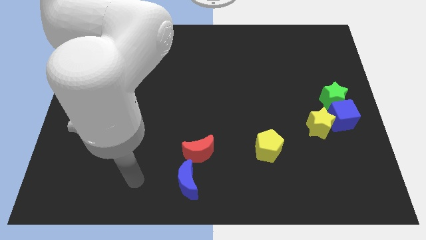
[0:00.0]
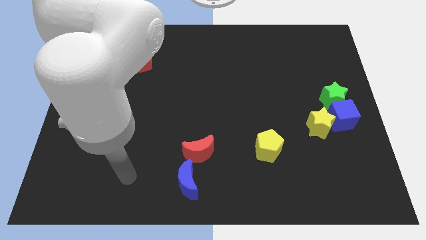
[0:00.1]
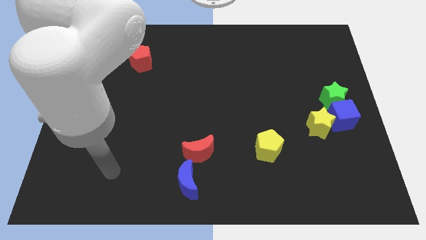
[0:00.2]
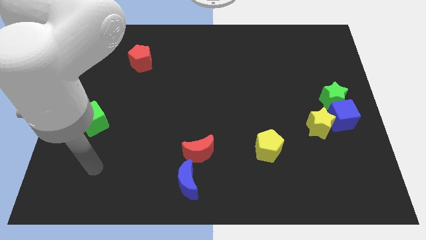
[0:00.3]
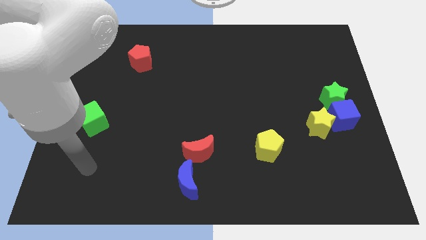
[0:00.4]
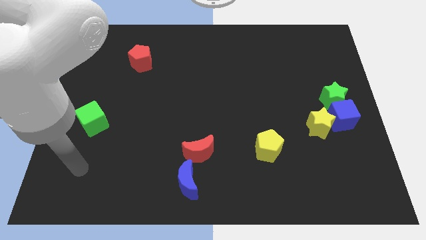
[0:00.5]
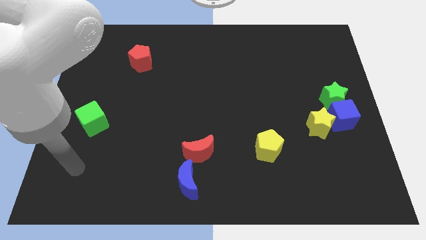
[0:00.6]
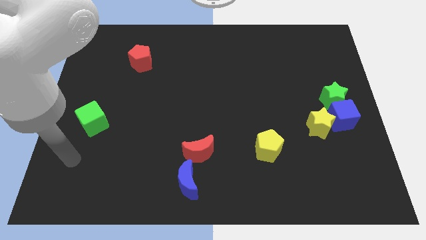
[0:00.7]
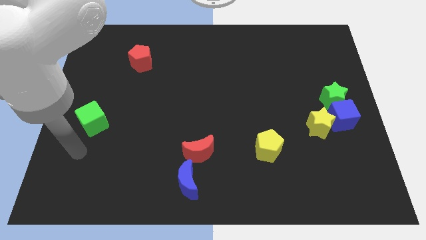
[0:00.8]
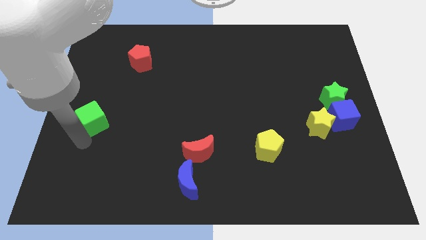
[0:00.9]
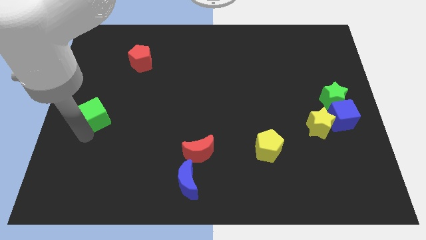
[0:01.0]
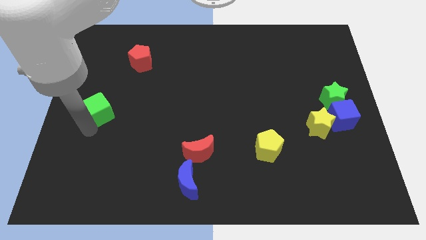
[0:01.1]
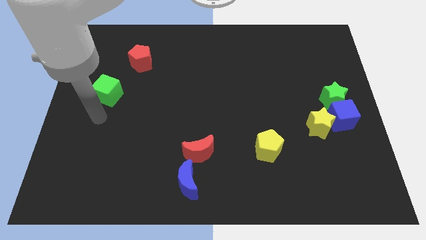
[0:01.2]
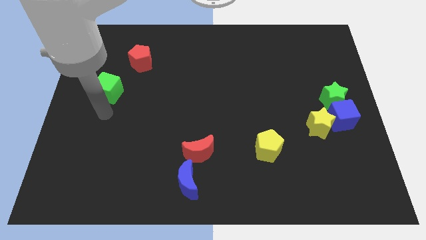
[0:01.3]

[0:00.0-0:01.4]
slightly push the green cube towards the top side of the board

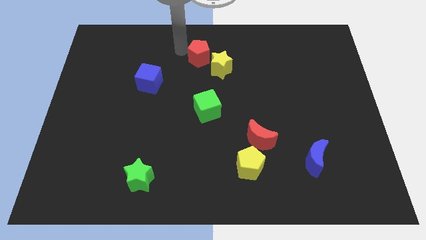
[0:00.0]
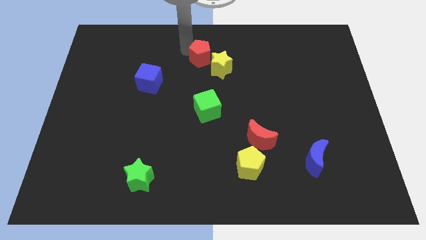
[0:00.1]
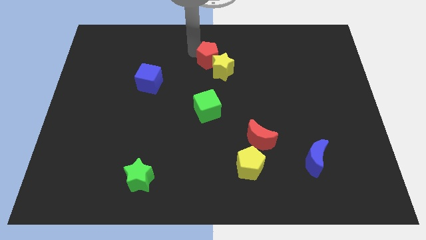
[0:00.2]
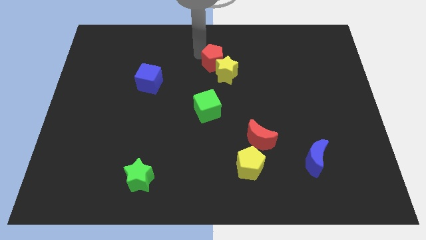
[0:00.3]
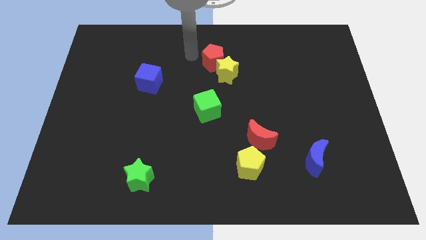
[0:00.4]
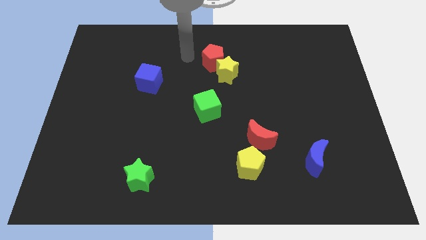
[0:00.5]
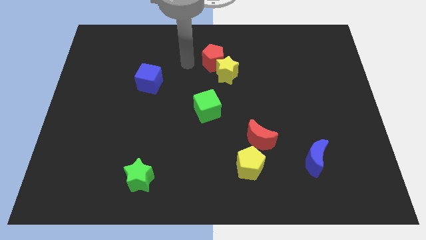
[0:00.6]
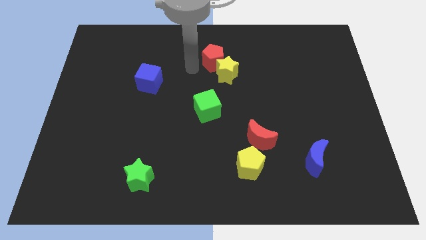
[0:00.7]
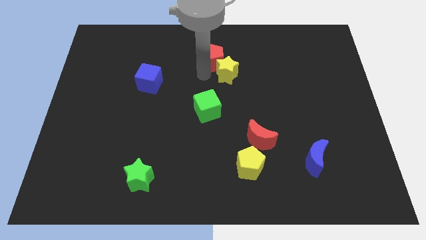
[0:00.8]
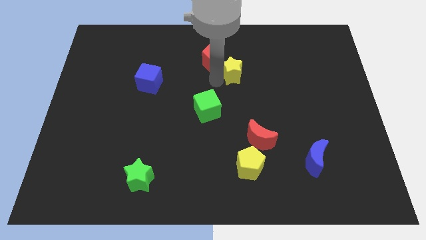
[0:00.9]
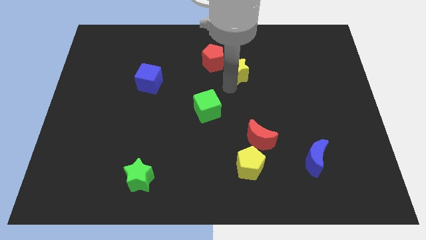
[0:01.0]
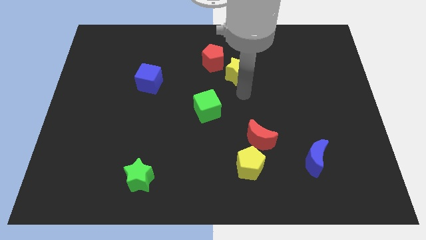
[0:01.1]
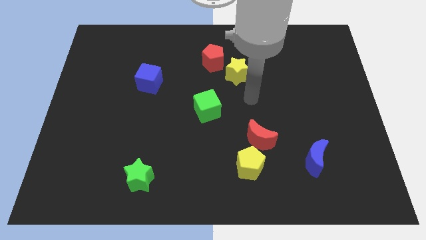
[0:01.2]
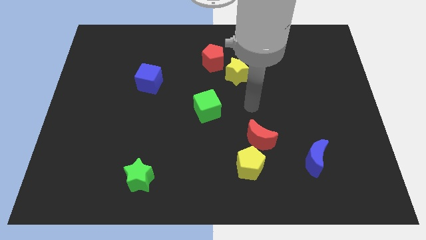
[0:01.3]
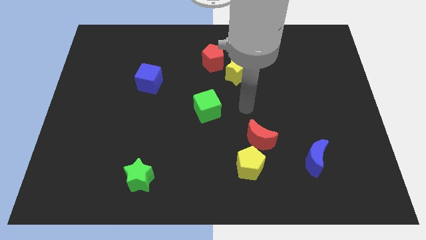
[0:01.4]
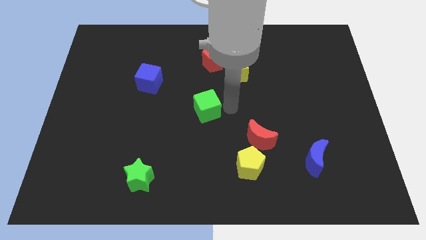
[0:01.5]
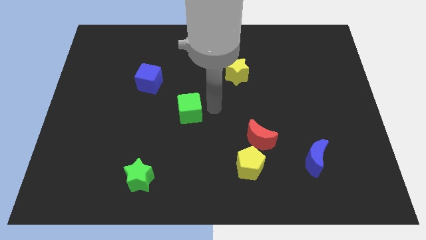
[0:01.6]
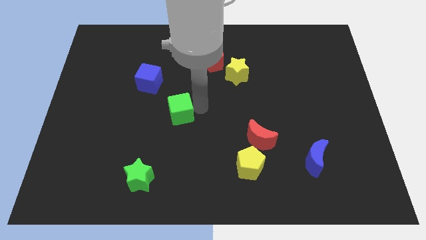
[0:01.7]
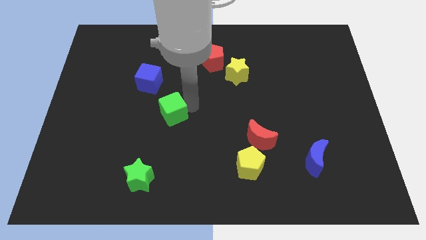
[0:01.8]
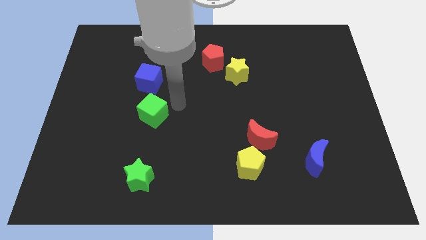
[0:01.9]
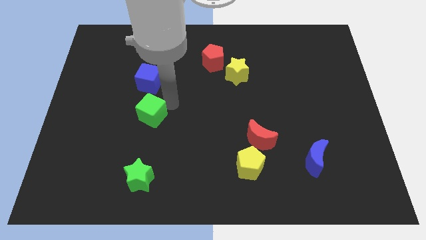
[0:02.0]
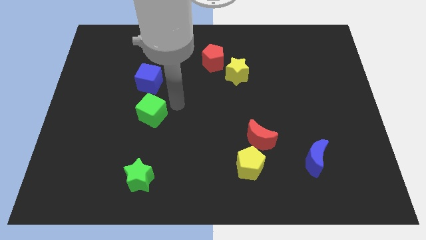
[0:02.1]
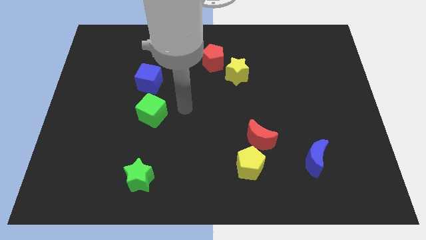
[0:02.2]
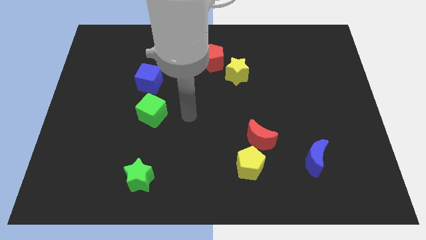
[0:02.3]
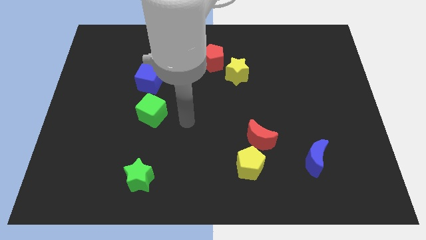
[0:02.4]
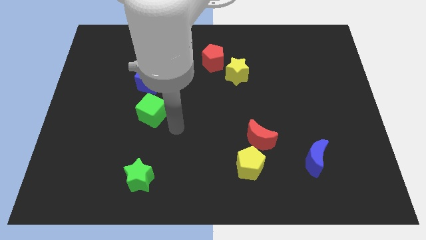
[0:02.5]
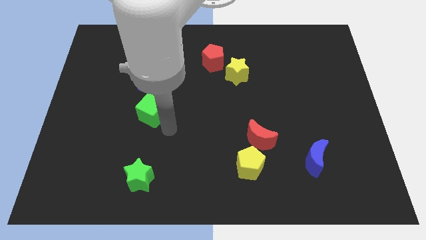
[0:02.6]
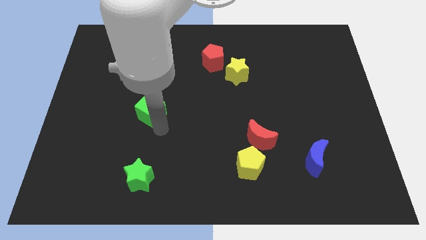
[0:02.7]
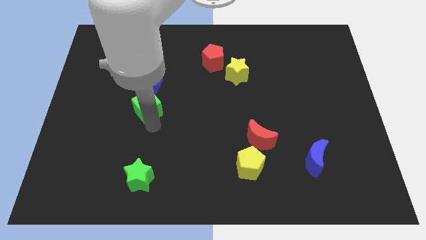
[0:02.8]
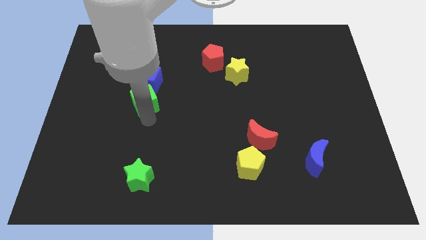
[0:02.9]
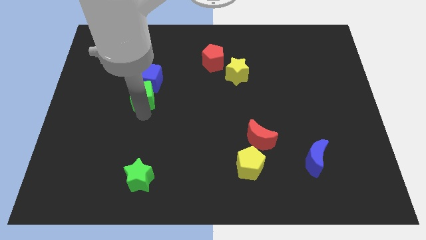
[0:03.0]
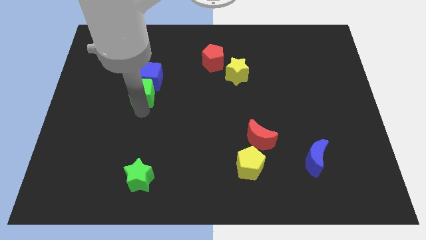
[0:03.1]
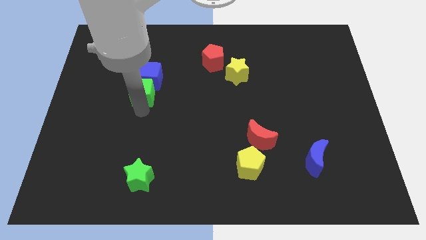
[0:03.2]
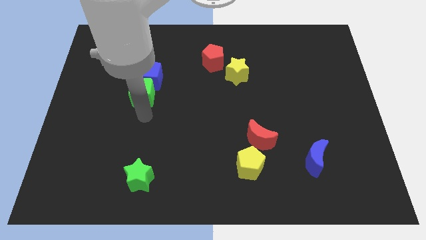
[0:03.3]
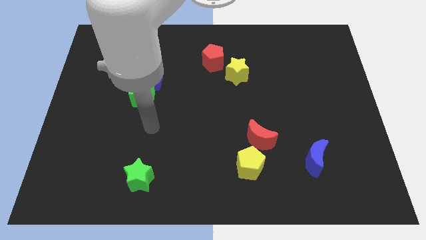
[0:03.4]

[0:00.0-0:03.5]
push the green cube into the blue cube

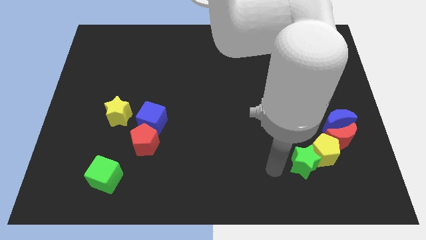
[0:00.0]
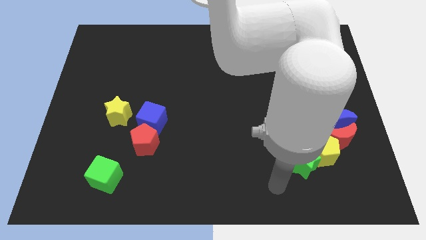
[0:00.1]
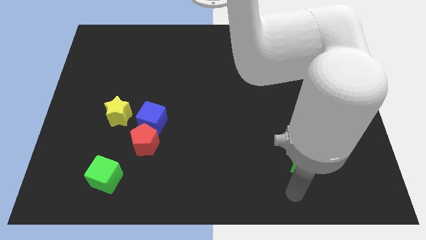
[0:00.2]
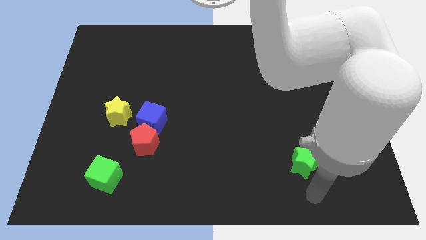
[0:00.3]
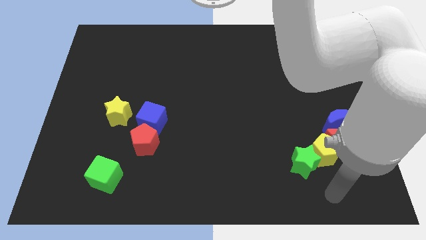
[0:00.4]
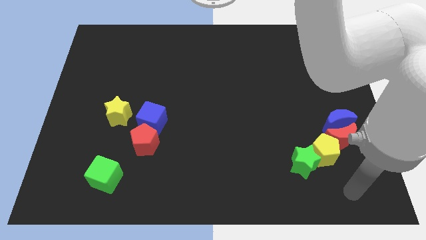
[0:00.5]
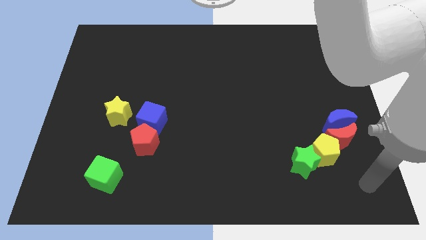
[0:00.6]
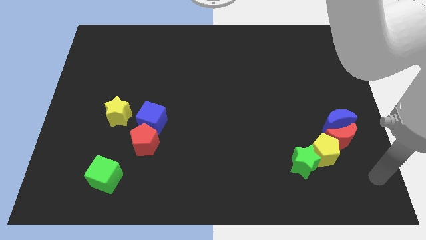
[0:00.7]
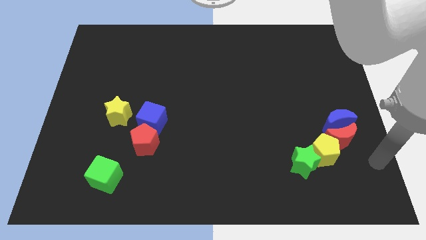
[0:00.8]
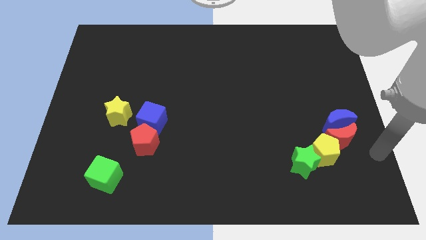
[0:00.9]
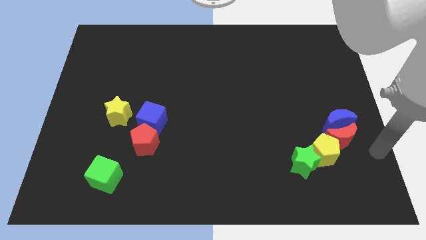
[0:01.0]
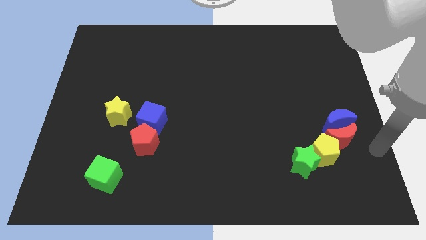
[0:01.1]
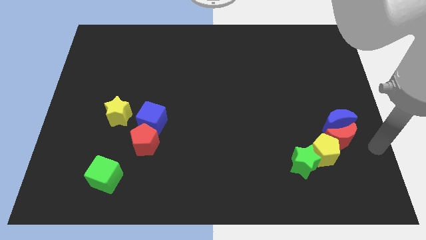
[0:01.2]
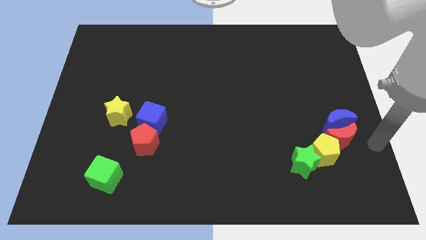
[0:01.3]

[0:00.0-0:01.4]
move your arm towards the red moon

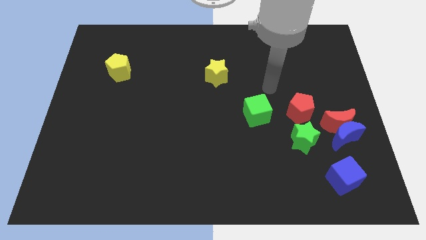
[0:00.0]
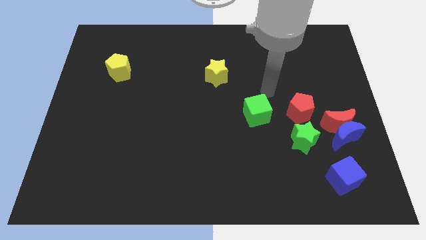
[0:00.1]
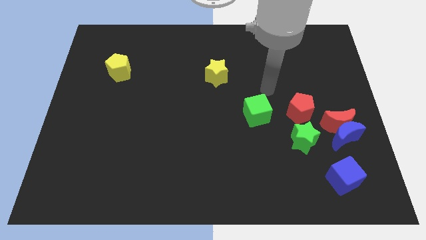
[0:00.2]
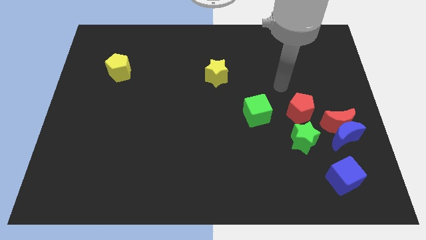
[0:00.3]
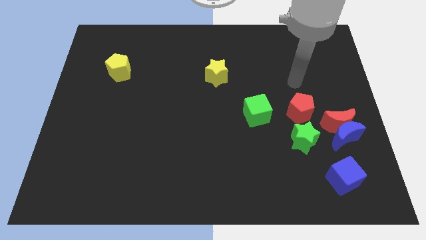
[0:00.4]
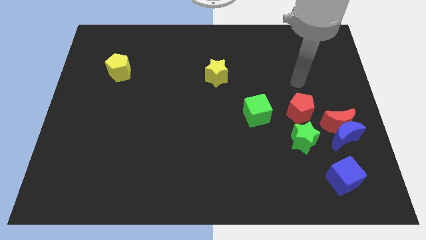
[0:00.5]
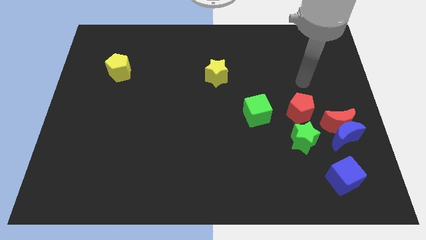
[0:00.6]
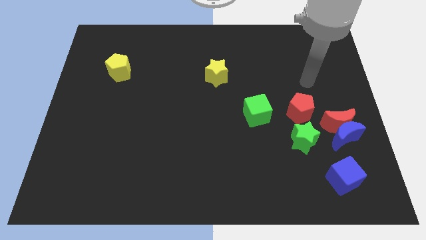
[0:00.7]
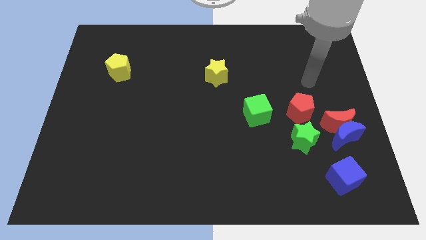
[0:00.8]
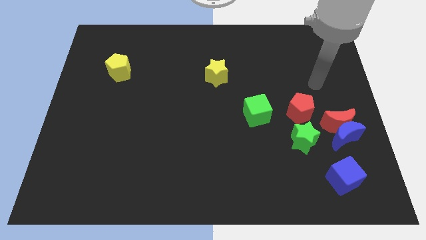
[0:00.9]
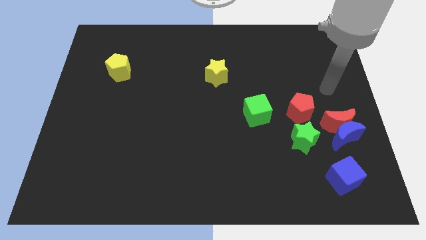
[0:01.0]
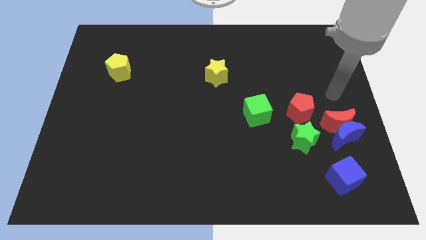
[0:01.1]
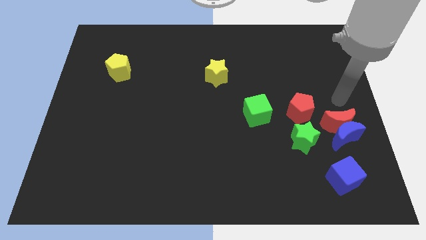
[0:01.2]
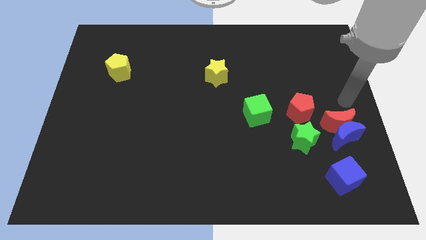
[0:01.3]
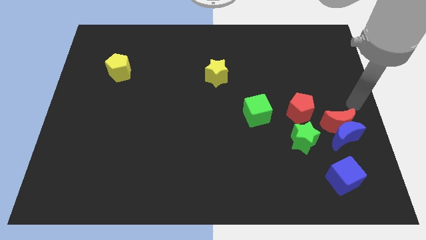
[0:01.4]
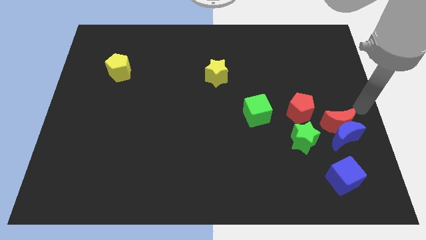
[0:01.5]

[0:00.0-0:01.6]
place arm at the top of red moon

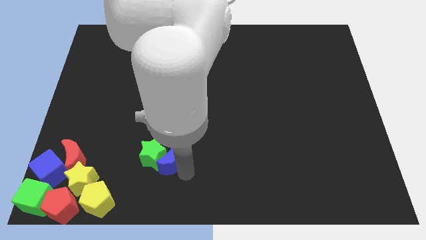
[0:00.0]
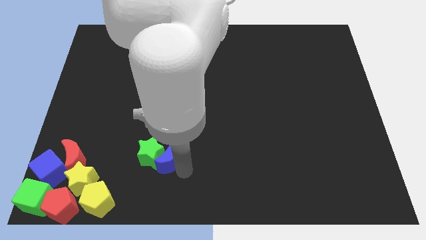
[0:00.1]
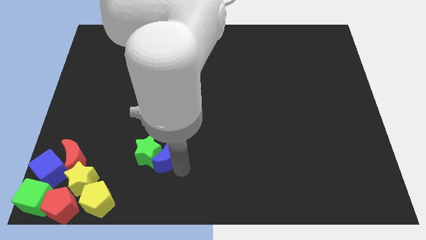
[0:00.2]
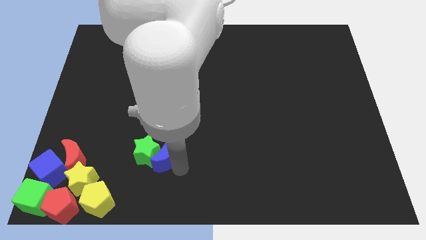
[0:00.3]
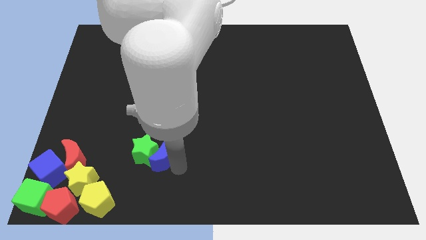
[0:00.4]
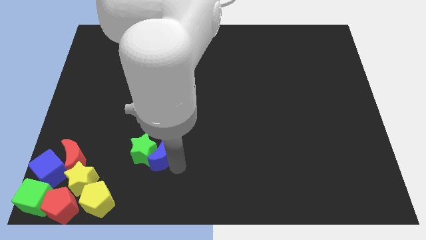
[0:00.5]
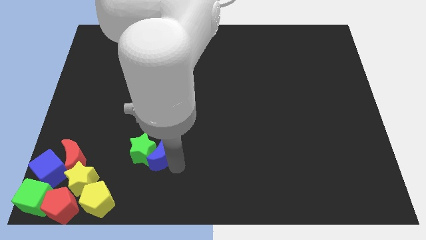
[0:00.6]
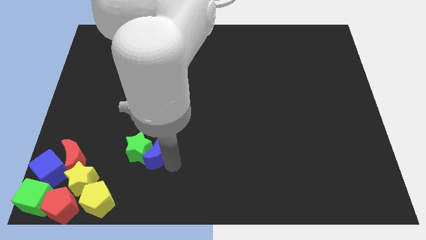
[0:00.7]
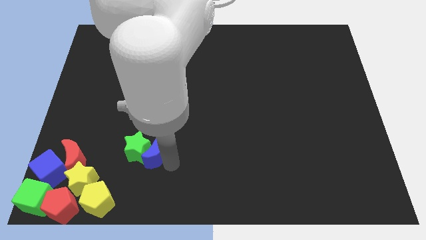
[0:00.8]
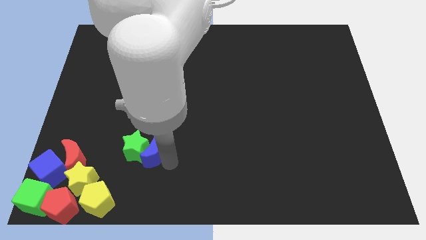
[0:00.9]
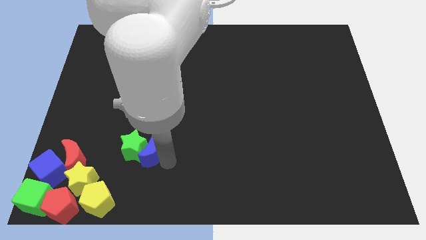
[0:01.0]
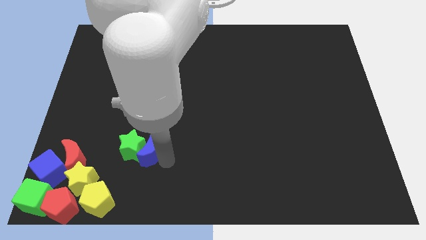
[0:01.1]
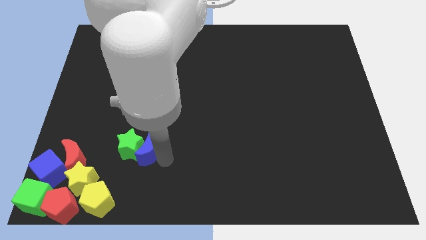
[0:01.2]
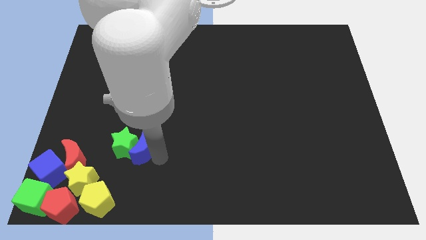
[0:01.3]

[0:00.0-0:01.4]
push the green star and blue moon to the top right side of the yellow star
